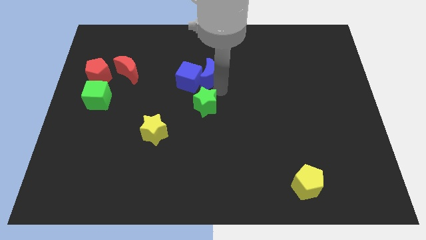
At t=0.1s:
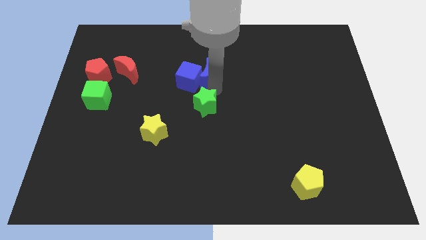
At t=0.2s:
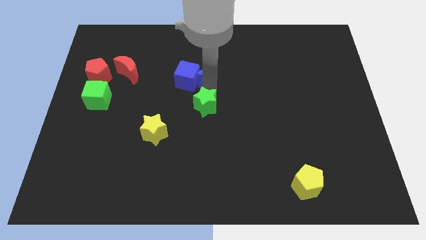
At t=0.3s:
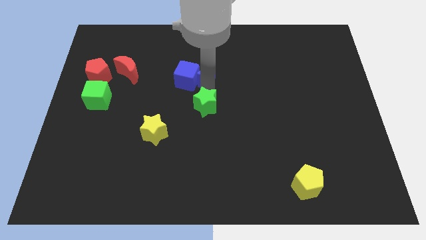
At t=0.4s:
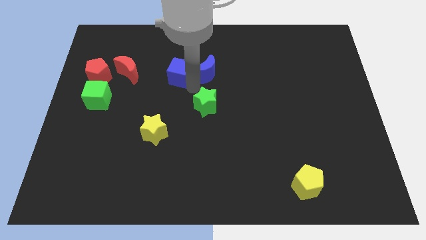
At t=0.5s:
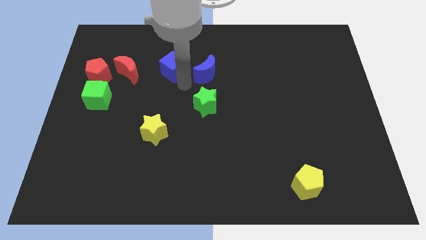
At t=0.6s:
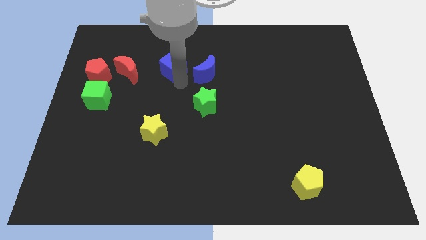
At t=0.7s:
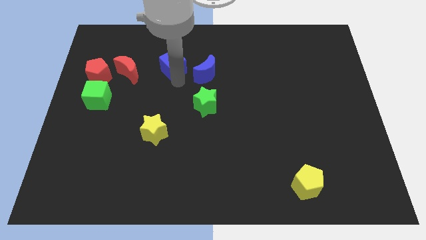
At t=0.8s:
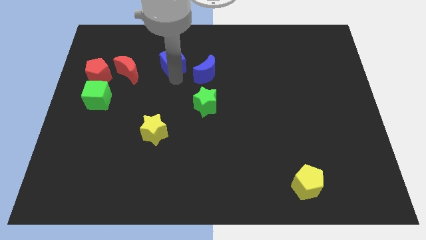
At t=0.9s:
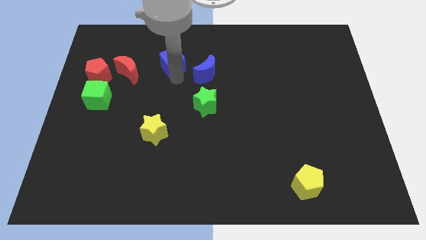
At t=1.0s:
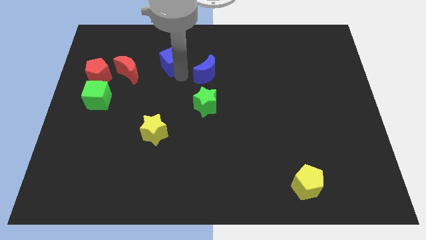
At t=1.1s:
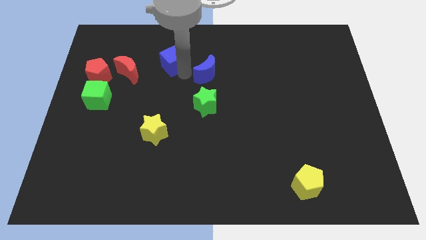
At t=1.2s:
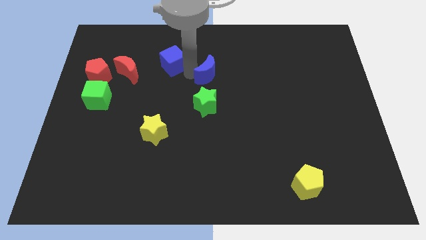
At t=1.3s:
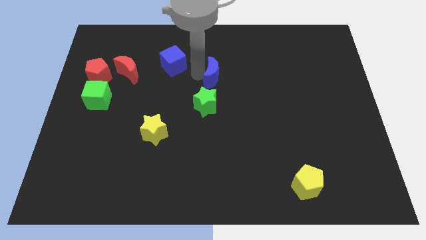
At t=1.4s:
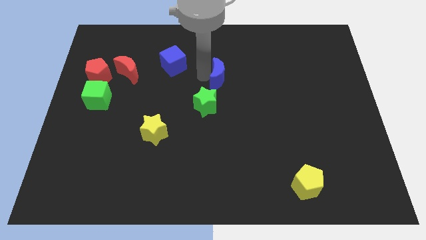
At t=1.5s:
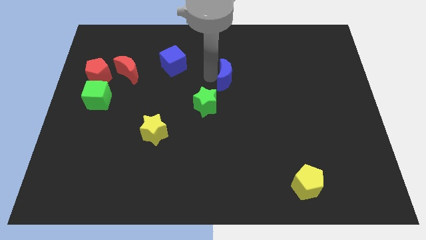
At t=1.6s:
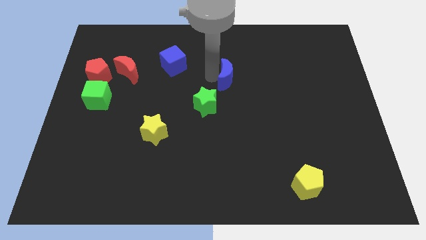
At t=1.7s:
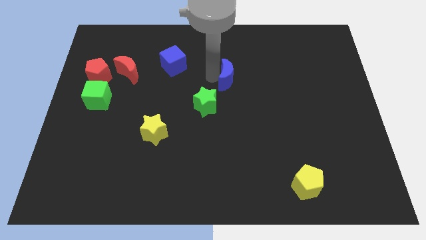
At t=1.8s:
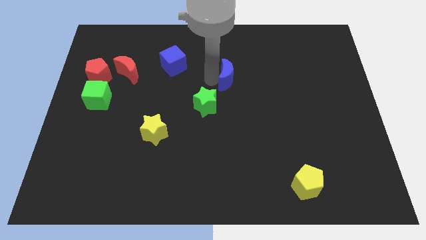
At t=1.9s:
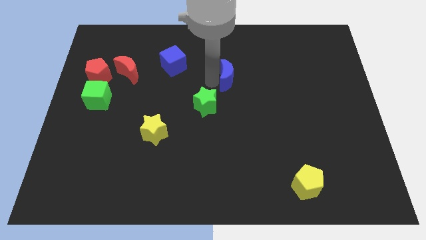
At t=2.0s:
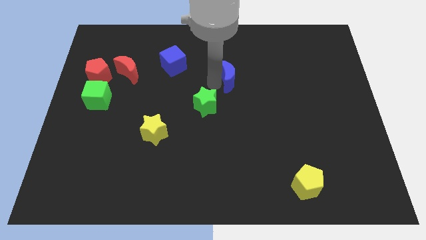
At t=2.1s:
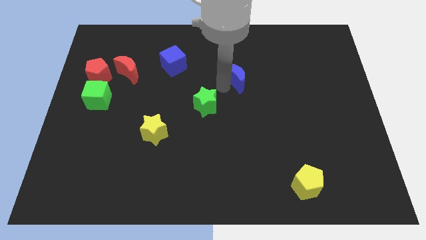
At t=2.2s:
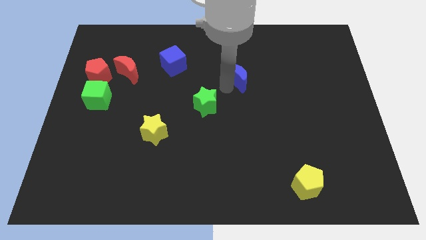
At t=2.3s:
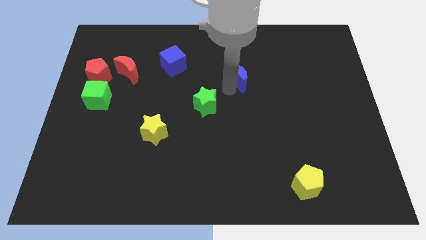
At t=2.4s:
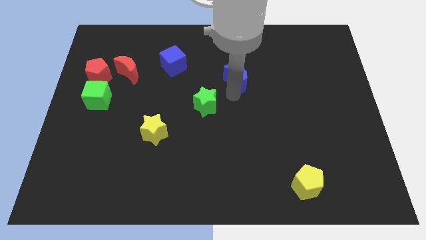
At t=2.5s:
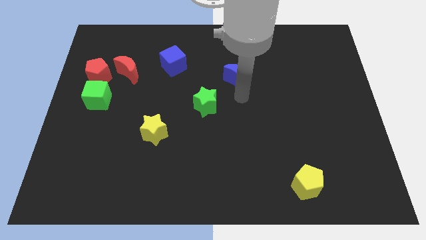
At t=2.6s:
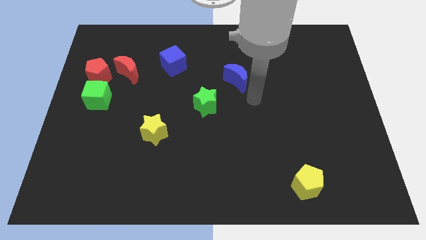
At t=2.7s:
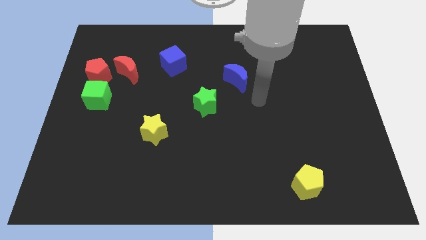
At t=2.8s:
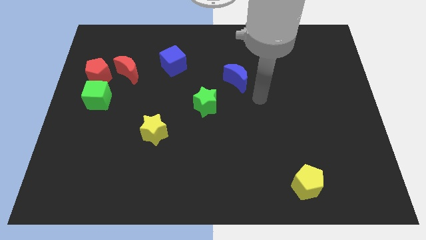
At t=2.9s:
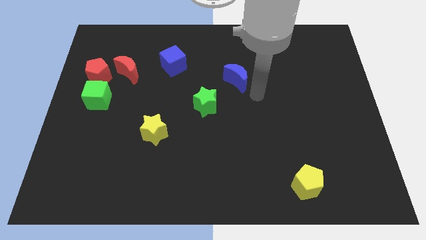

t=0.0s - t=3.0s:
separate the blue crescent and the blue cube

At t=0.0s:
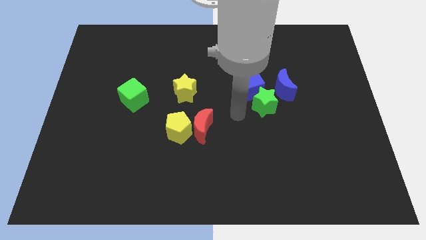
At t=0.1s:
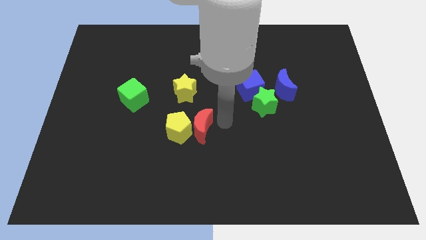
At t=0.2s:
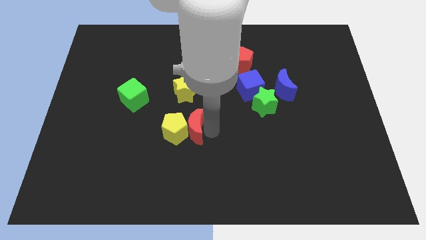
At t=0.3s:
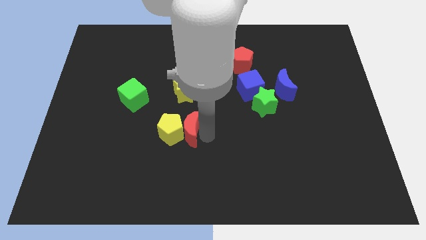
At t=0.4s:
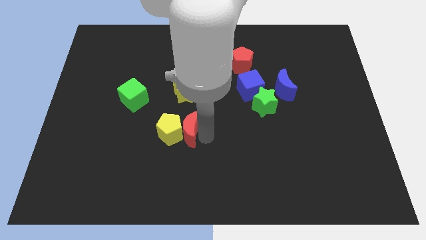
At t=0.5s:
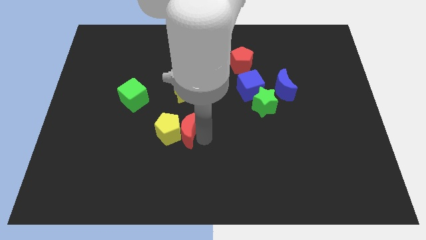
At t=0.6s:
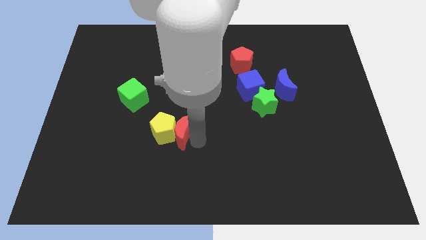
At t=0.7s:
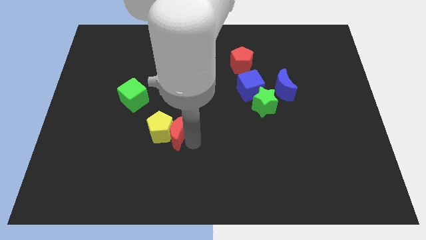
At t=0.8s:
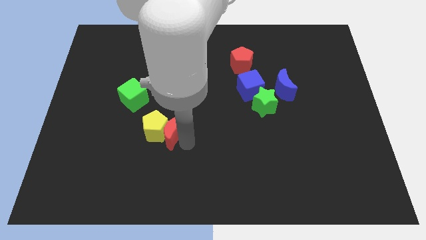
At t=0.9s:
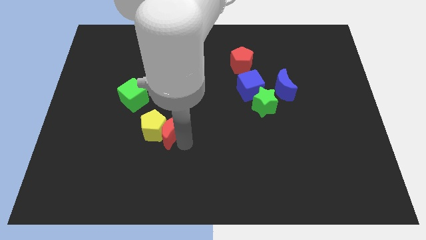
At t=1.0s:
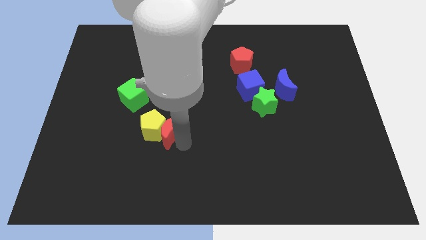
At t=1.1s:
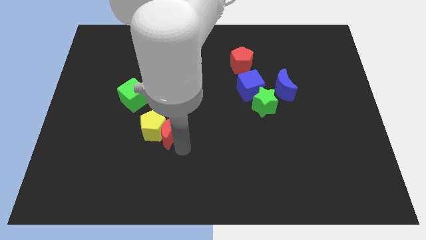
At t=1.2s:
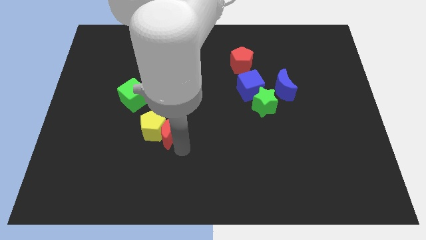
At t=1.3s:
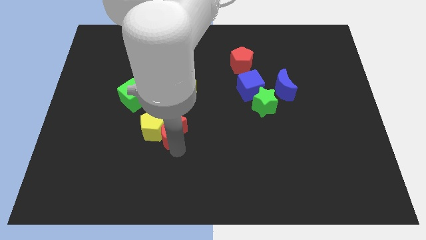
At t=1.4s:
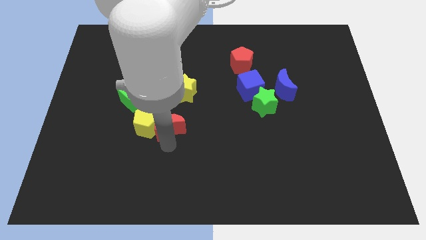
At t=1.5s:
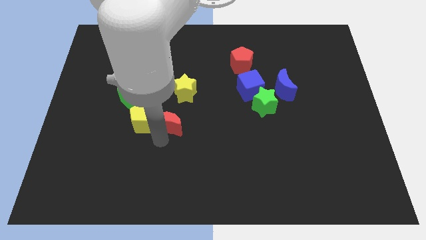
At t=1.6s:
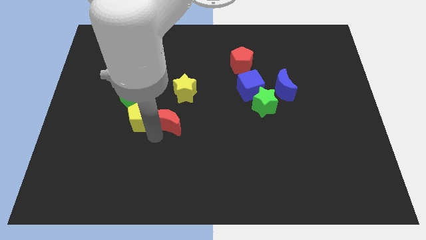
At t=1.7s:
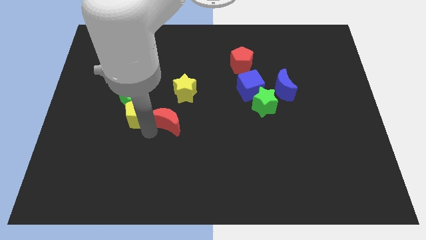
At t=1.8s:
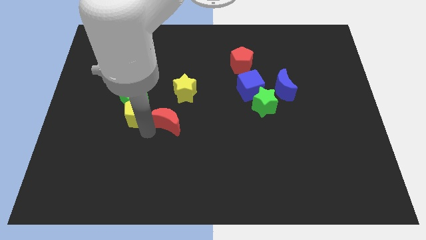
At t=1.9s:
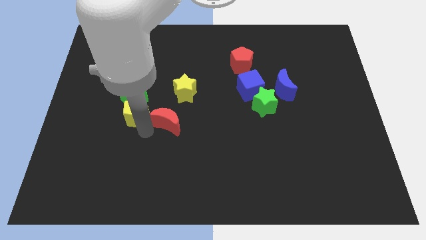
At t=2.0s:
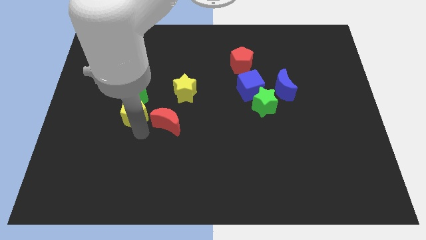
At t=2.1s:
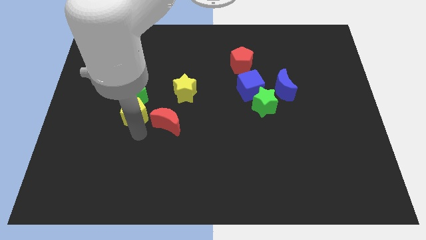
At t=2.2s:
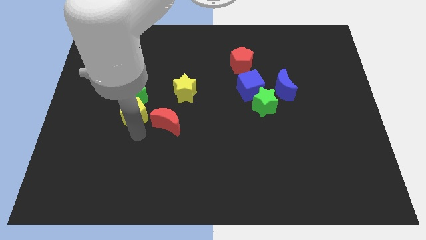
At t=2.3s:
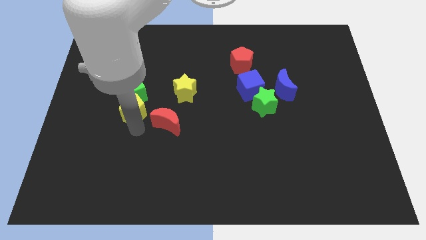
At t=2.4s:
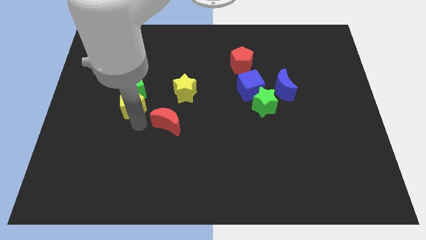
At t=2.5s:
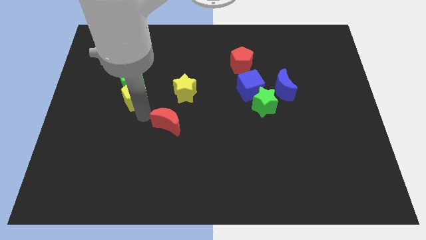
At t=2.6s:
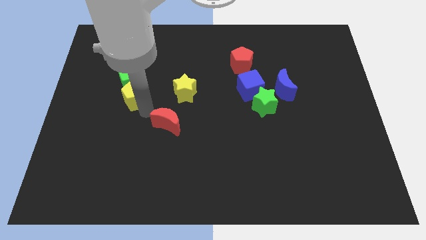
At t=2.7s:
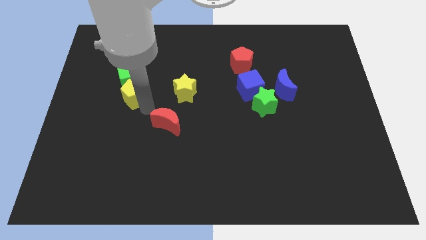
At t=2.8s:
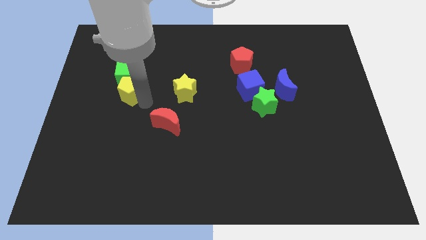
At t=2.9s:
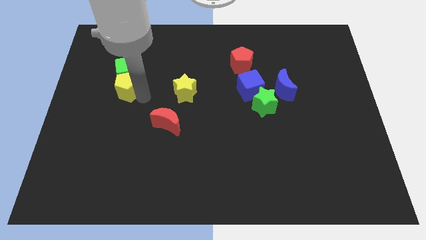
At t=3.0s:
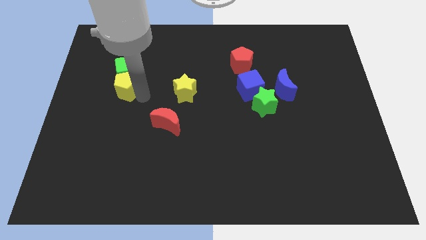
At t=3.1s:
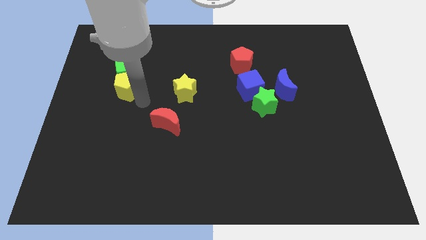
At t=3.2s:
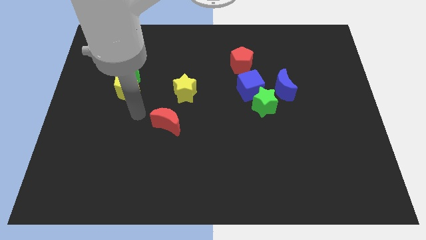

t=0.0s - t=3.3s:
push the yellow pentagon into the green cube

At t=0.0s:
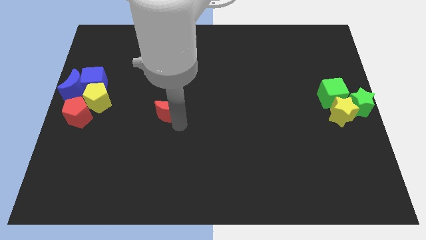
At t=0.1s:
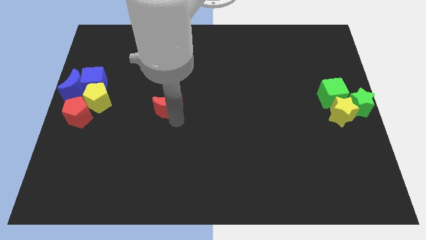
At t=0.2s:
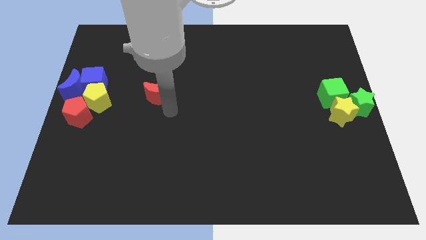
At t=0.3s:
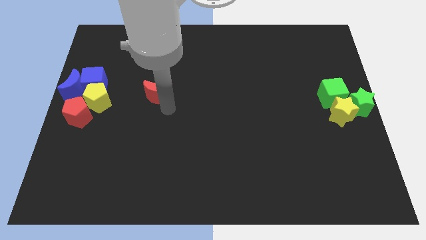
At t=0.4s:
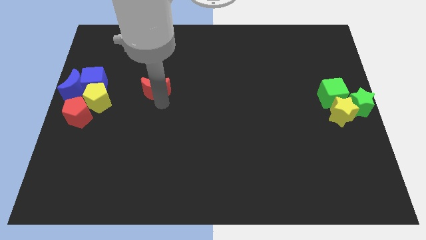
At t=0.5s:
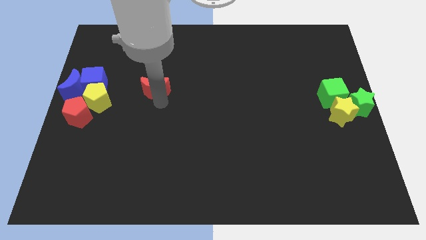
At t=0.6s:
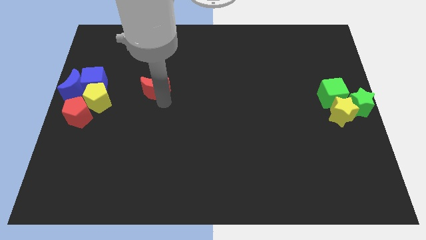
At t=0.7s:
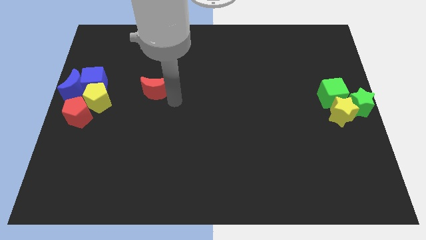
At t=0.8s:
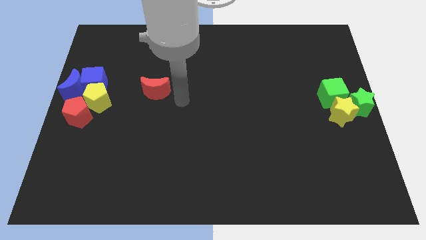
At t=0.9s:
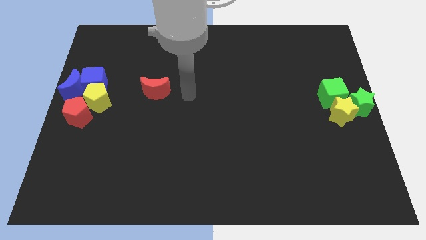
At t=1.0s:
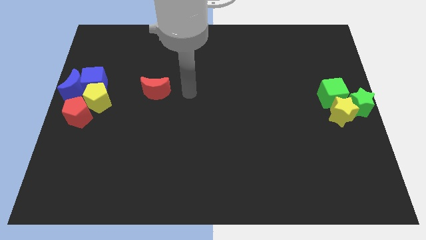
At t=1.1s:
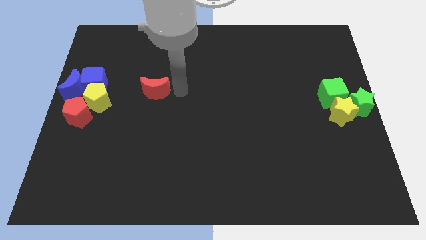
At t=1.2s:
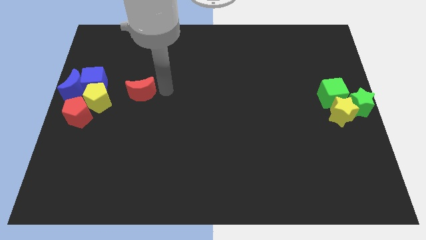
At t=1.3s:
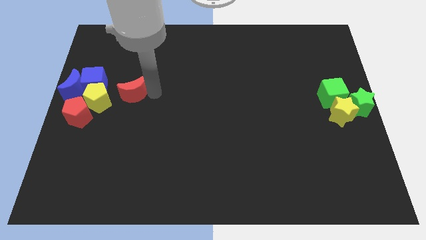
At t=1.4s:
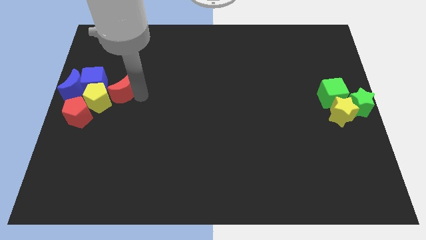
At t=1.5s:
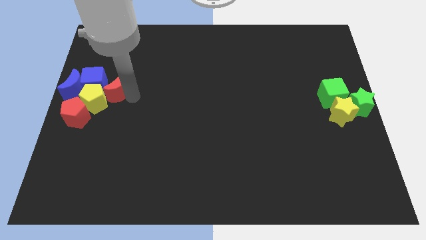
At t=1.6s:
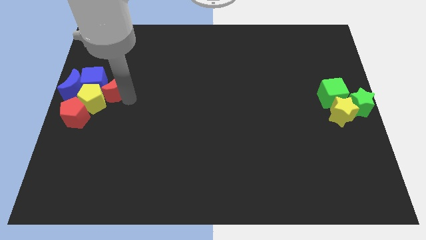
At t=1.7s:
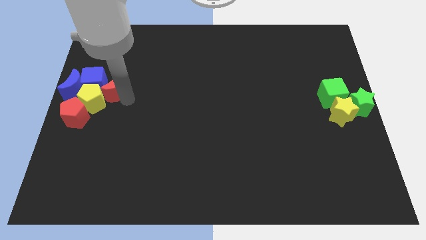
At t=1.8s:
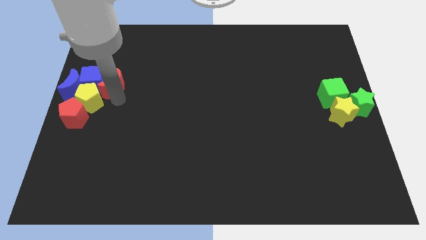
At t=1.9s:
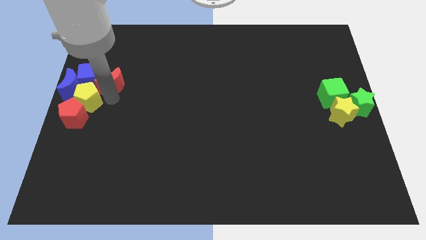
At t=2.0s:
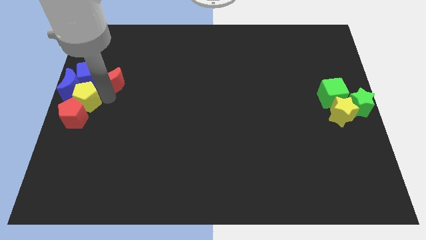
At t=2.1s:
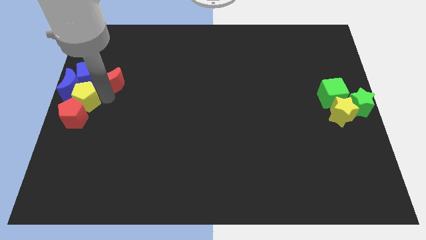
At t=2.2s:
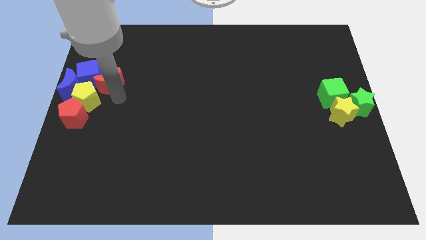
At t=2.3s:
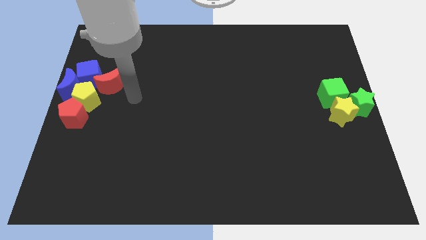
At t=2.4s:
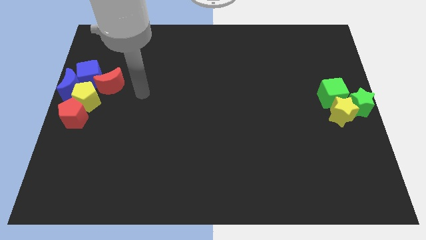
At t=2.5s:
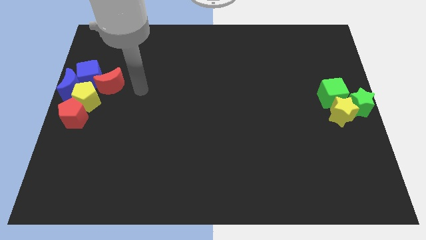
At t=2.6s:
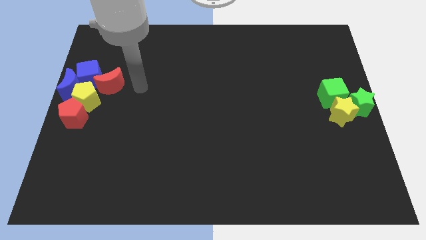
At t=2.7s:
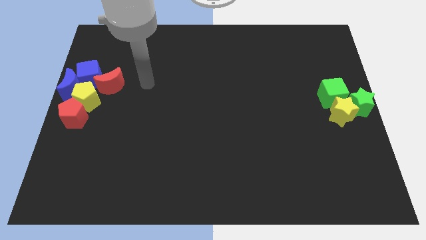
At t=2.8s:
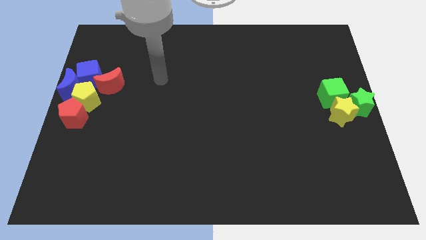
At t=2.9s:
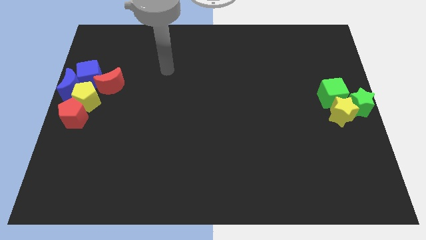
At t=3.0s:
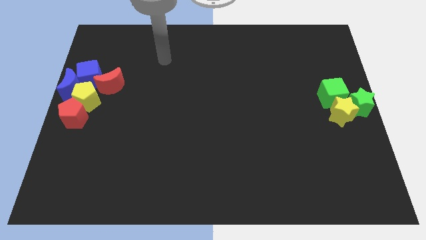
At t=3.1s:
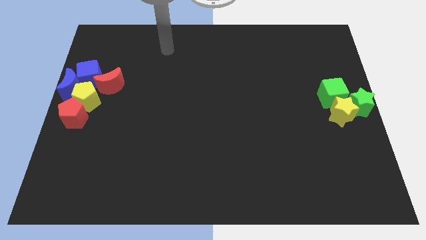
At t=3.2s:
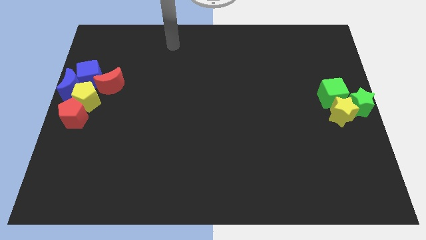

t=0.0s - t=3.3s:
move the red moon into the bottom right of blue cube
